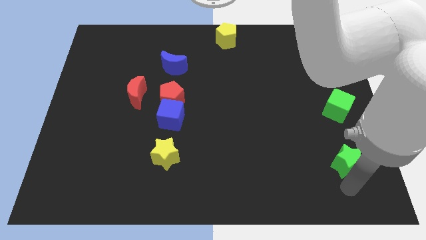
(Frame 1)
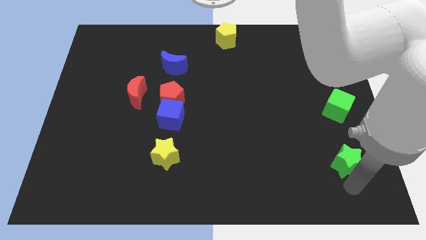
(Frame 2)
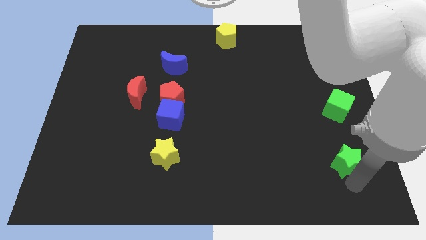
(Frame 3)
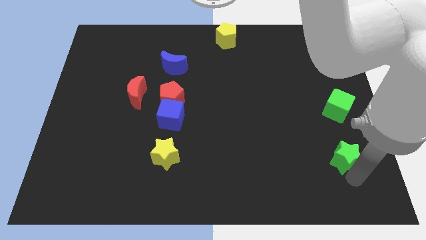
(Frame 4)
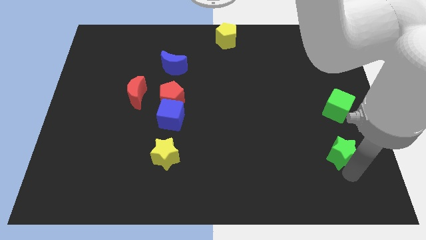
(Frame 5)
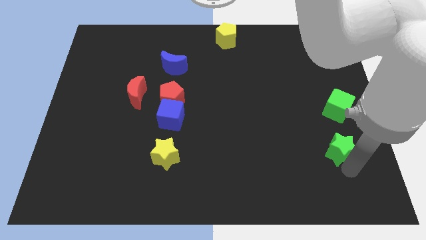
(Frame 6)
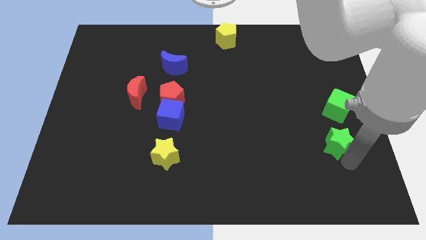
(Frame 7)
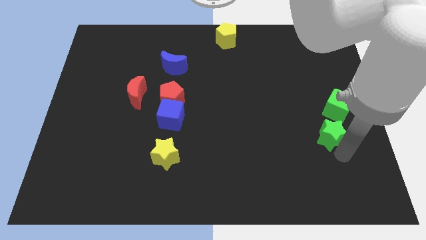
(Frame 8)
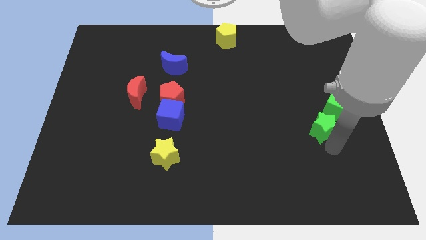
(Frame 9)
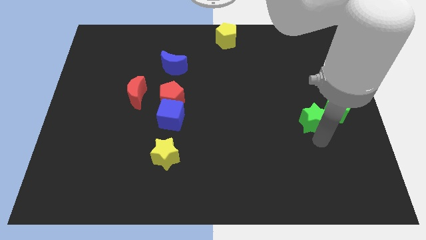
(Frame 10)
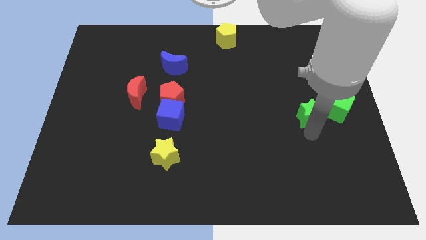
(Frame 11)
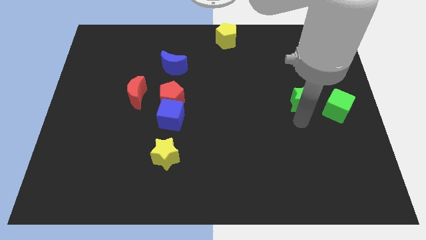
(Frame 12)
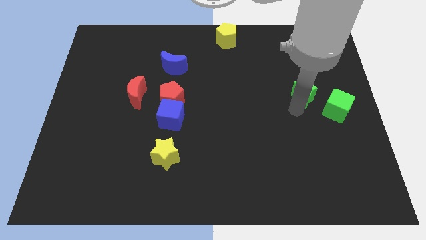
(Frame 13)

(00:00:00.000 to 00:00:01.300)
move the green star to the left of the green cube

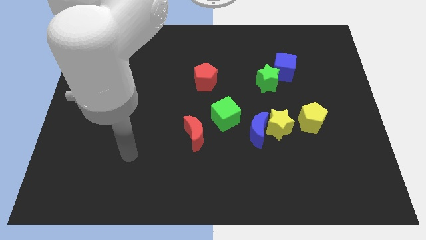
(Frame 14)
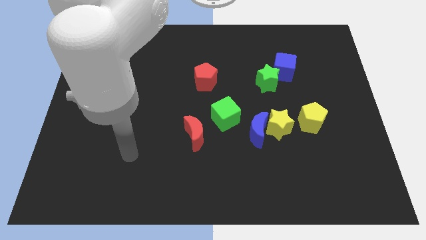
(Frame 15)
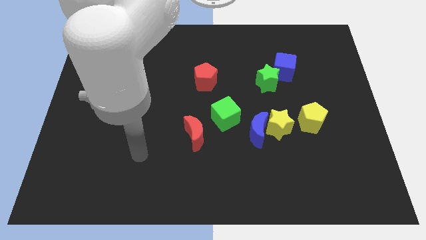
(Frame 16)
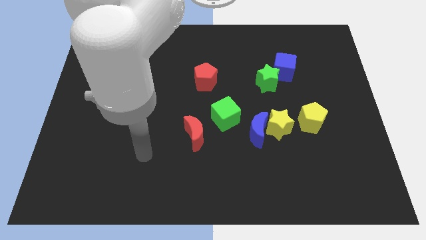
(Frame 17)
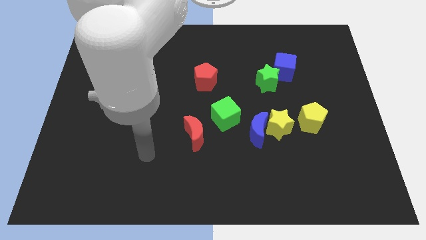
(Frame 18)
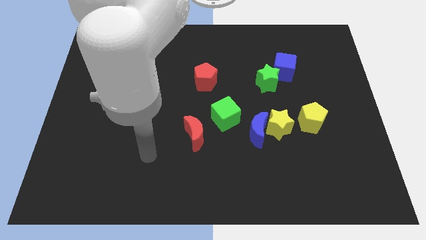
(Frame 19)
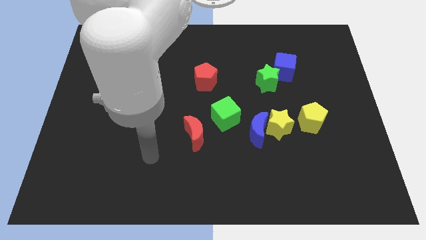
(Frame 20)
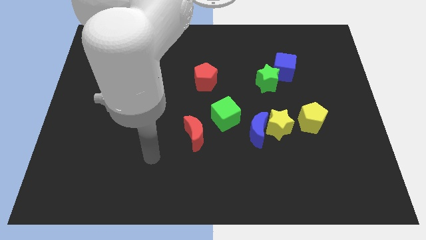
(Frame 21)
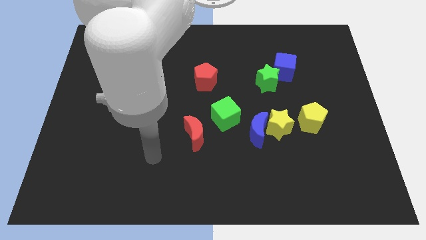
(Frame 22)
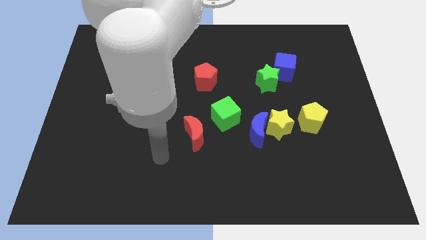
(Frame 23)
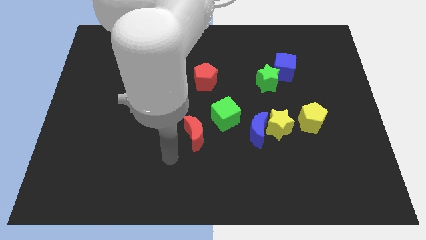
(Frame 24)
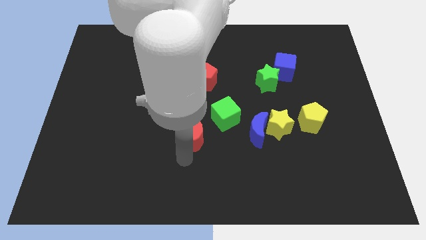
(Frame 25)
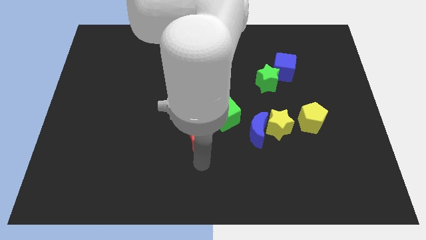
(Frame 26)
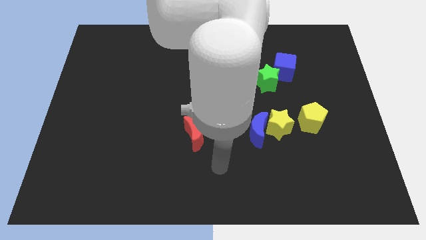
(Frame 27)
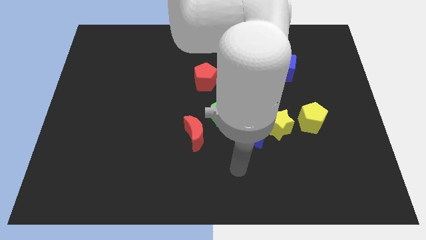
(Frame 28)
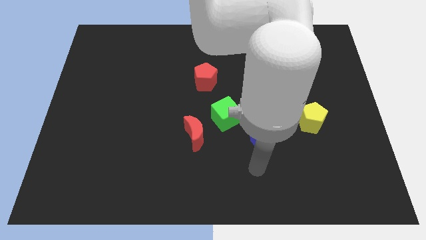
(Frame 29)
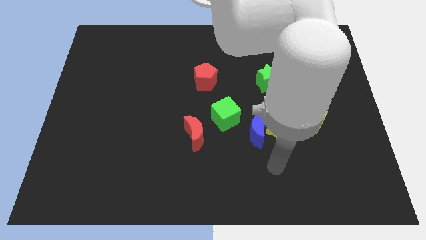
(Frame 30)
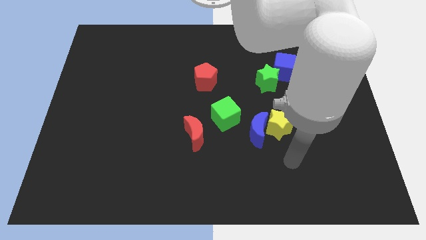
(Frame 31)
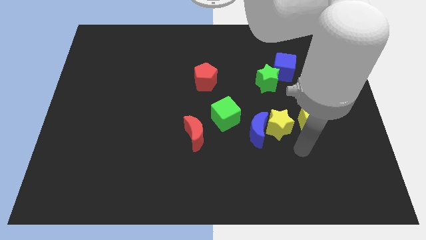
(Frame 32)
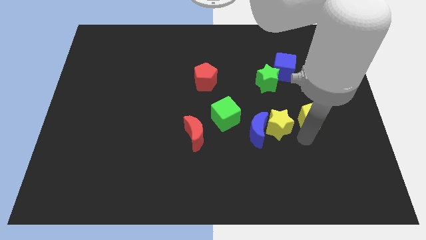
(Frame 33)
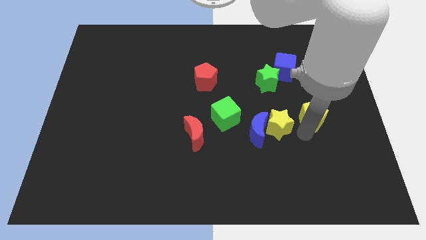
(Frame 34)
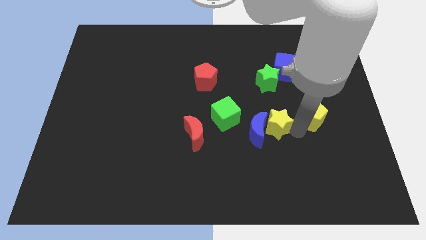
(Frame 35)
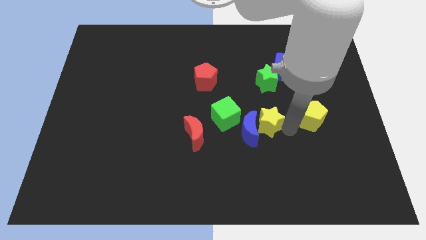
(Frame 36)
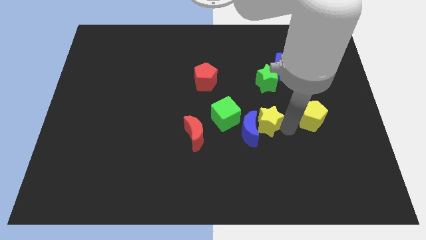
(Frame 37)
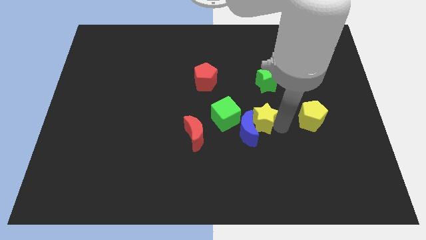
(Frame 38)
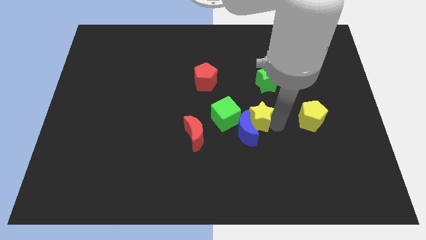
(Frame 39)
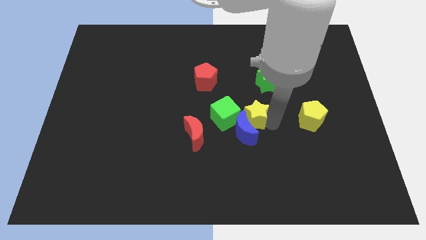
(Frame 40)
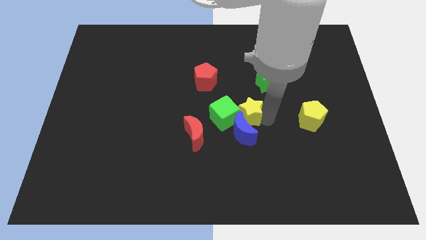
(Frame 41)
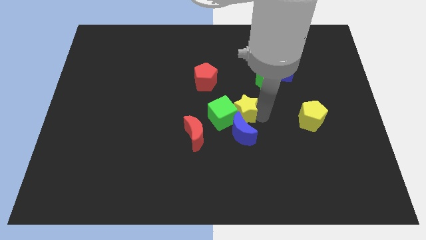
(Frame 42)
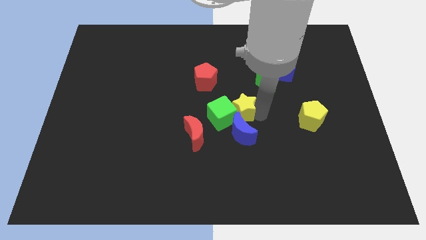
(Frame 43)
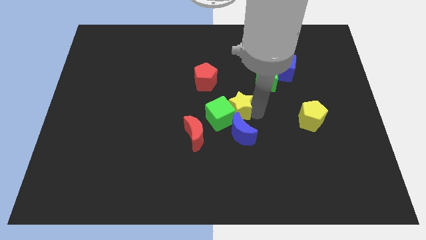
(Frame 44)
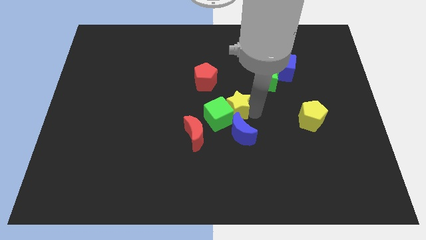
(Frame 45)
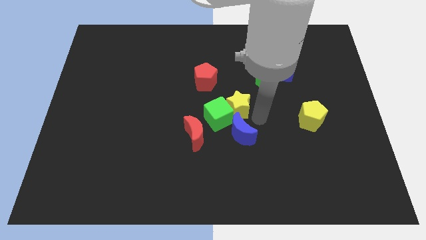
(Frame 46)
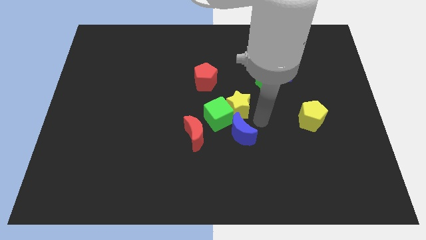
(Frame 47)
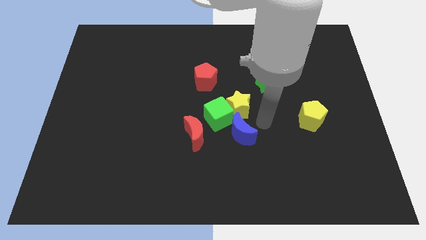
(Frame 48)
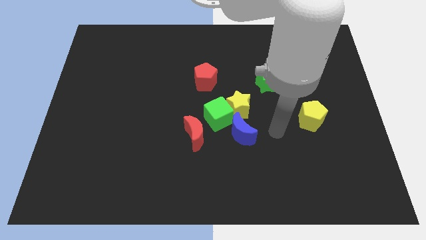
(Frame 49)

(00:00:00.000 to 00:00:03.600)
push the yellow star into the green cube

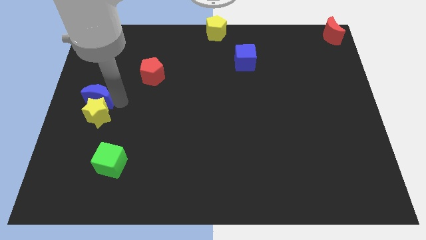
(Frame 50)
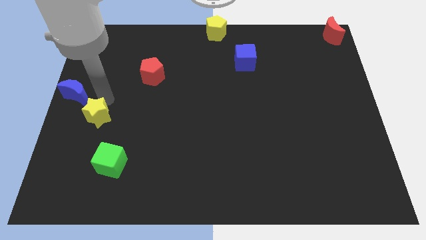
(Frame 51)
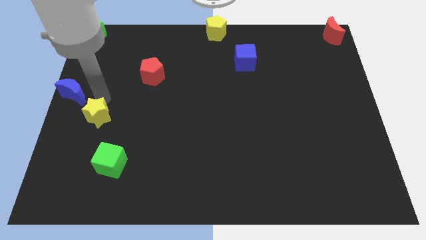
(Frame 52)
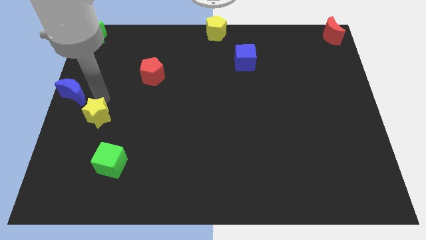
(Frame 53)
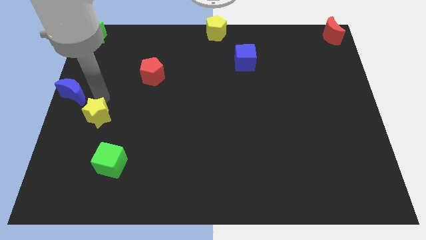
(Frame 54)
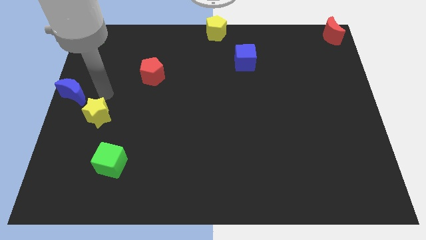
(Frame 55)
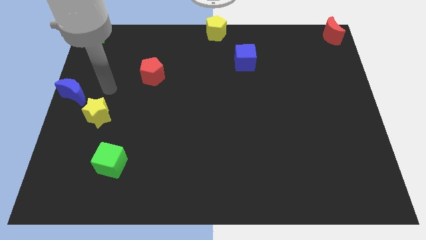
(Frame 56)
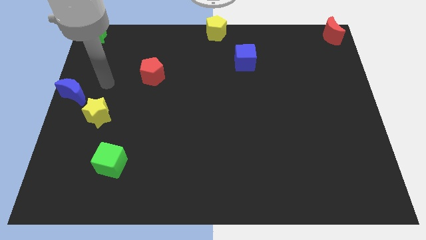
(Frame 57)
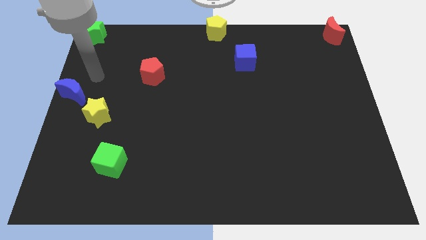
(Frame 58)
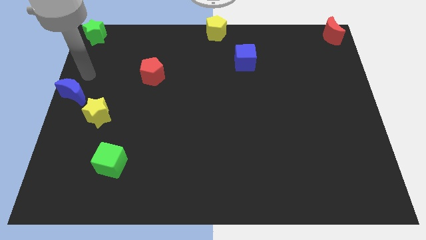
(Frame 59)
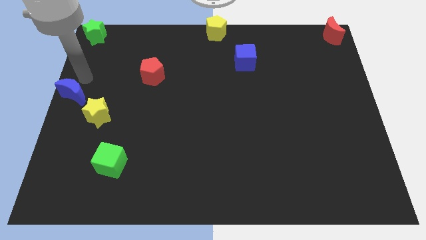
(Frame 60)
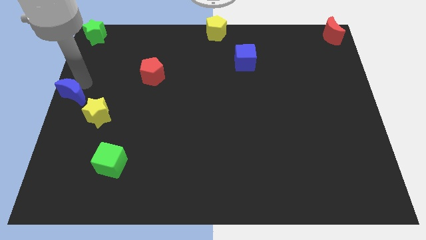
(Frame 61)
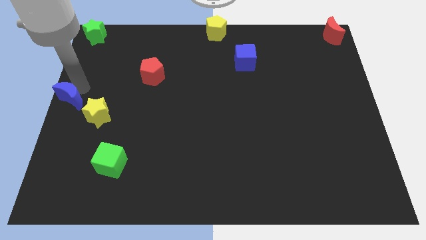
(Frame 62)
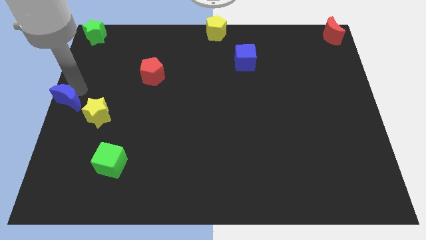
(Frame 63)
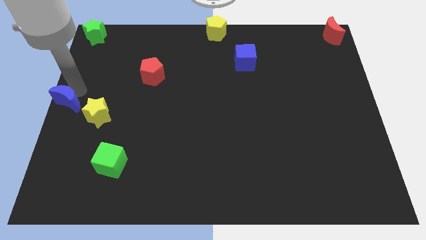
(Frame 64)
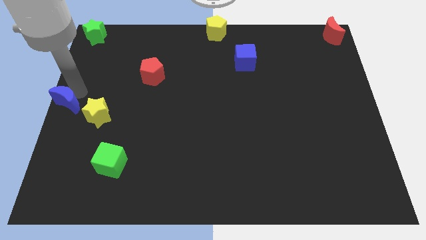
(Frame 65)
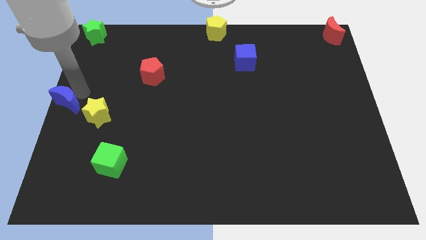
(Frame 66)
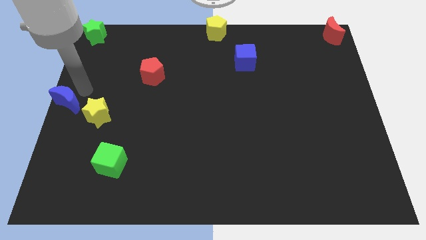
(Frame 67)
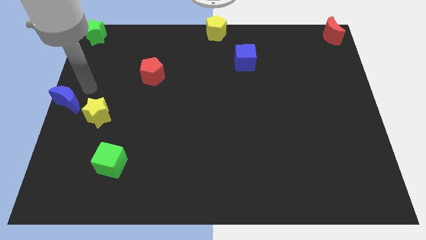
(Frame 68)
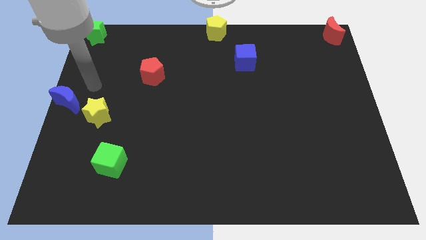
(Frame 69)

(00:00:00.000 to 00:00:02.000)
push the blue crescent to the left center of the board

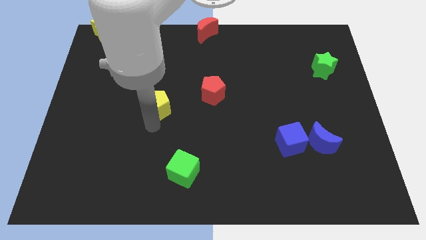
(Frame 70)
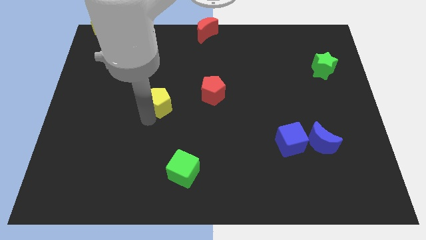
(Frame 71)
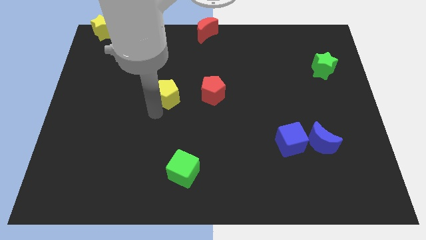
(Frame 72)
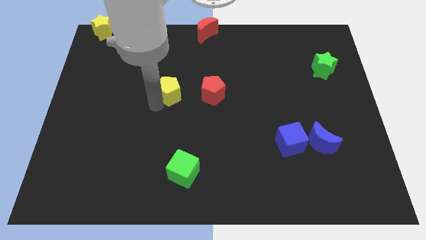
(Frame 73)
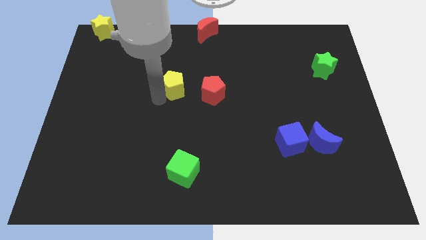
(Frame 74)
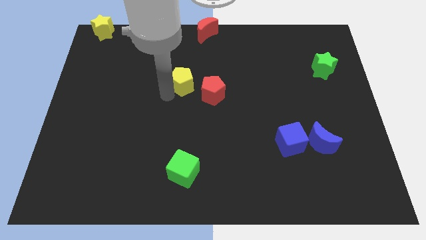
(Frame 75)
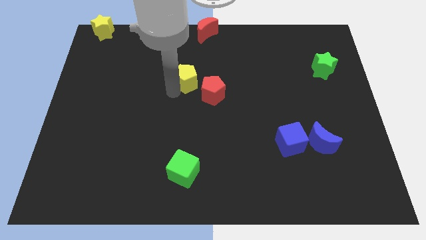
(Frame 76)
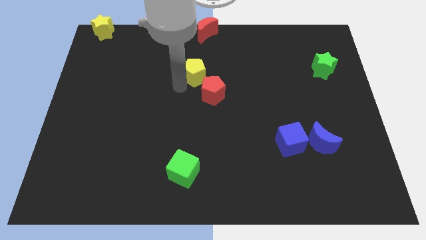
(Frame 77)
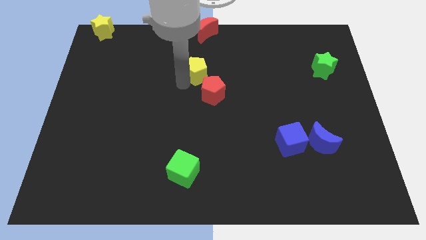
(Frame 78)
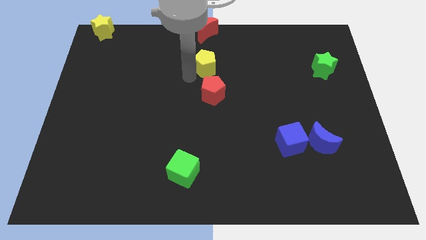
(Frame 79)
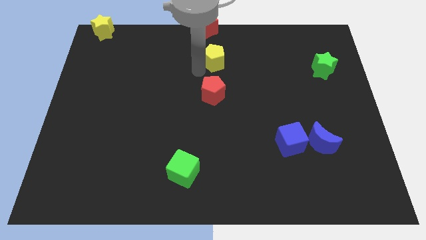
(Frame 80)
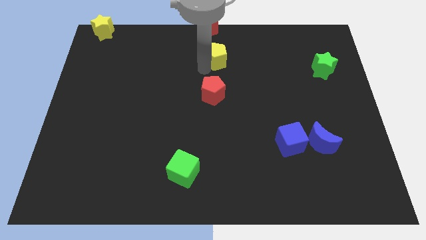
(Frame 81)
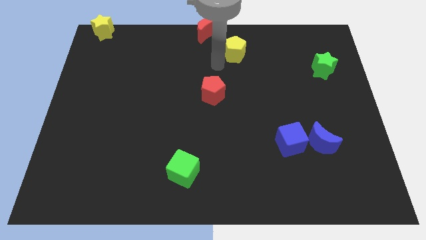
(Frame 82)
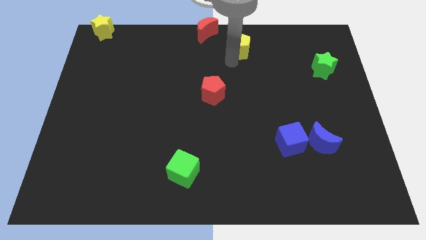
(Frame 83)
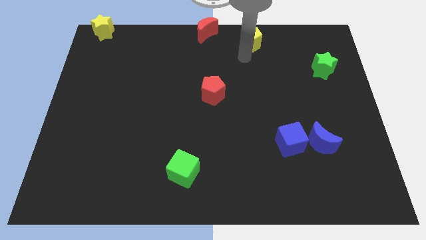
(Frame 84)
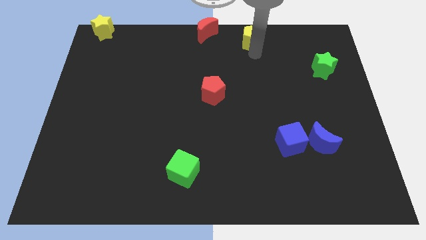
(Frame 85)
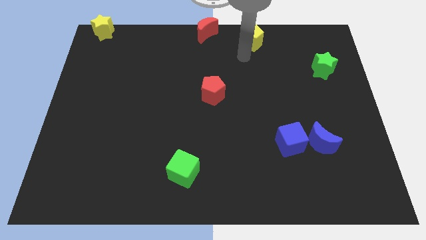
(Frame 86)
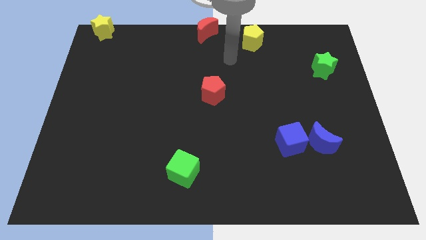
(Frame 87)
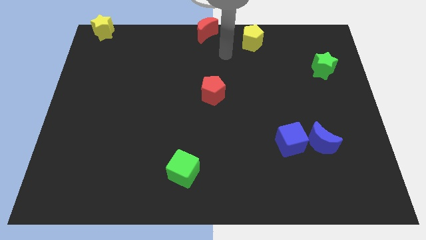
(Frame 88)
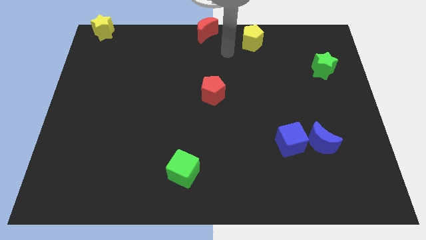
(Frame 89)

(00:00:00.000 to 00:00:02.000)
place the yellow pentagon between green star and red moon
